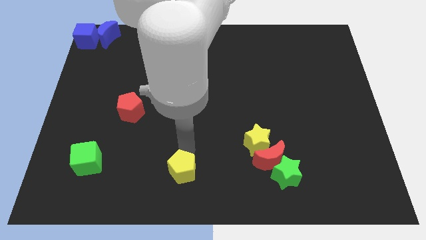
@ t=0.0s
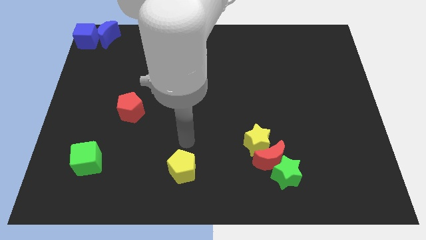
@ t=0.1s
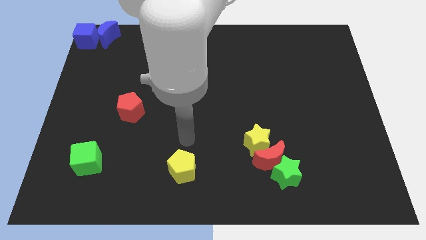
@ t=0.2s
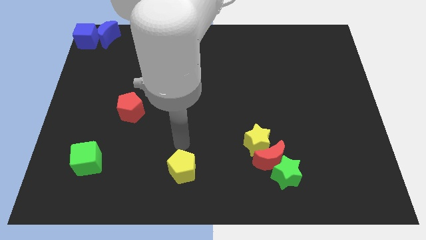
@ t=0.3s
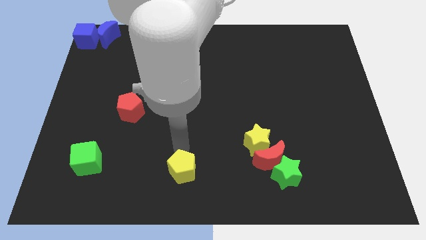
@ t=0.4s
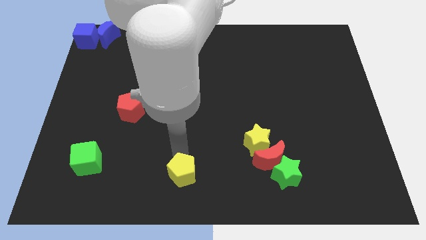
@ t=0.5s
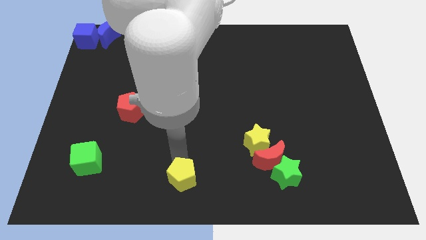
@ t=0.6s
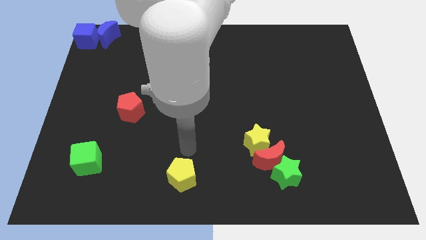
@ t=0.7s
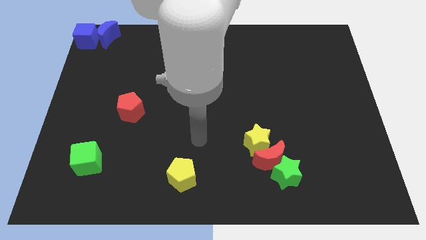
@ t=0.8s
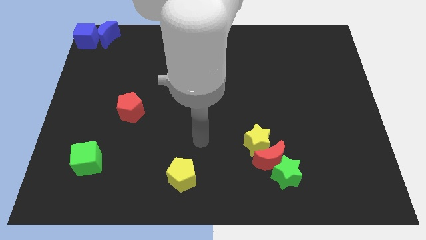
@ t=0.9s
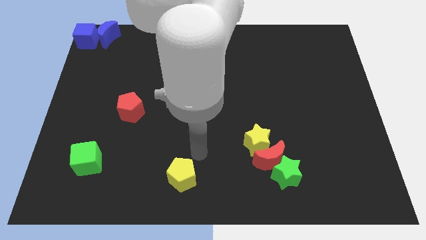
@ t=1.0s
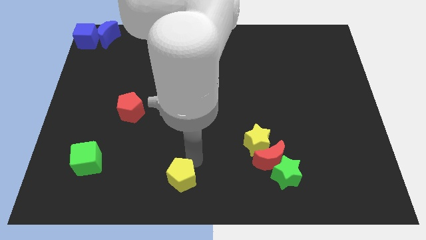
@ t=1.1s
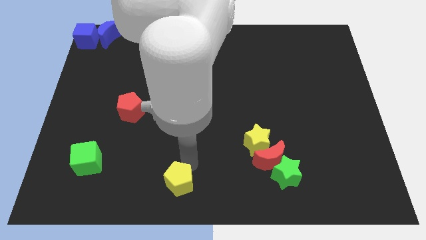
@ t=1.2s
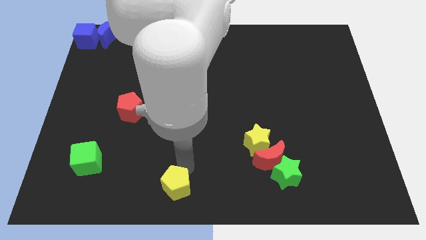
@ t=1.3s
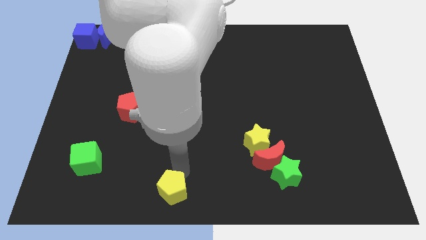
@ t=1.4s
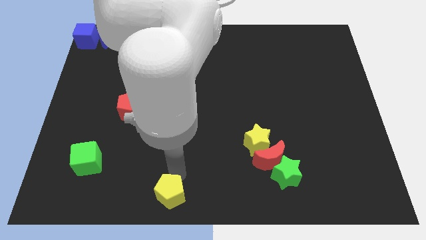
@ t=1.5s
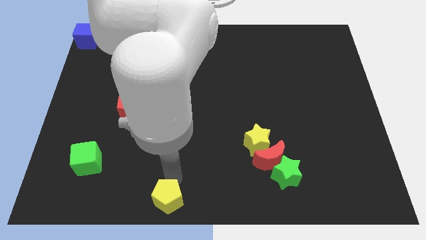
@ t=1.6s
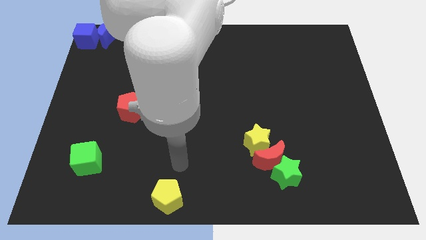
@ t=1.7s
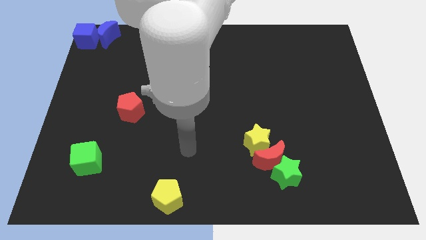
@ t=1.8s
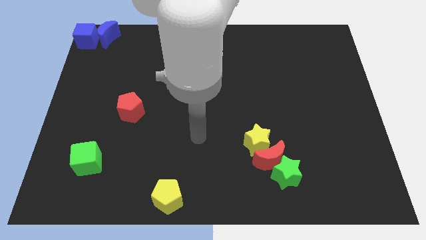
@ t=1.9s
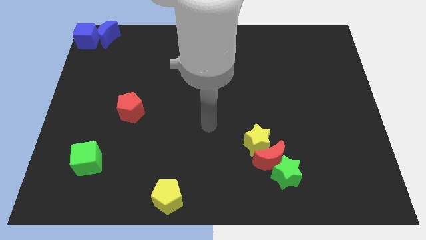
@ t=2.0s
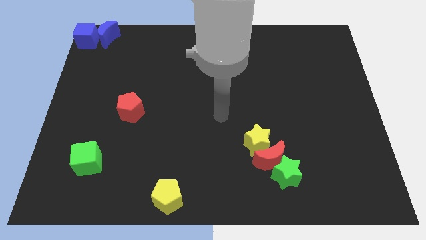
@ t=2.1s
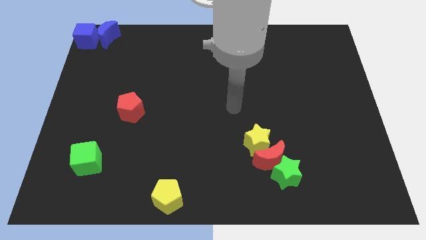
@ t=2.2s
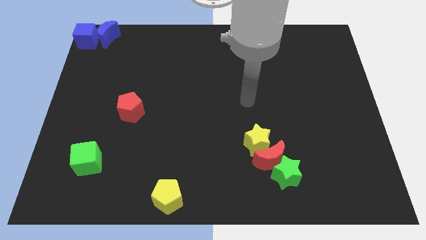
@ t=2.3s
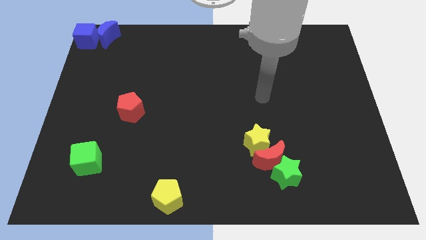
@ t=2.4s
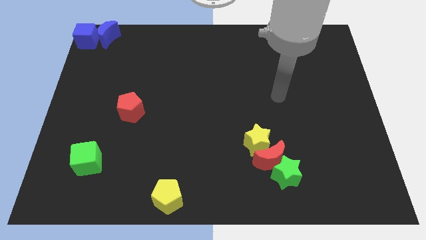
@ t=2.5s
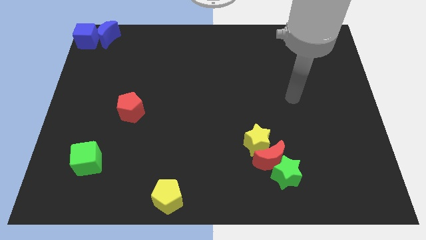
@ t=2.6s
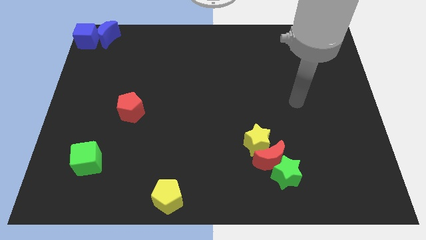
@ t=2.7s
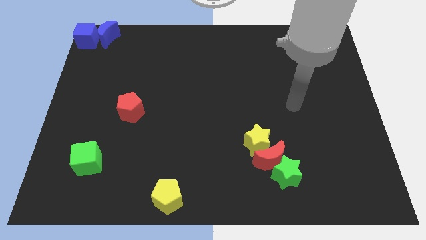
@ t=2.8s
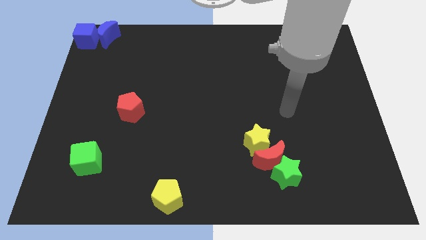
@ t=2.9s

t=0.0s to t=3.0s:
push the yellow pentagon to the bottom side

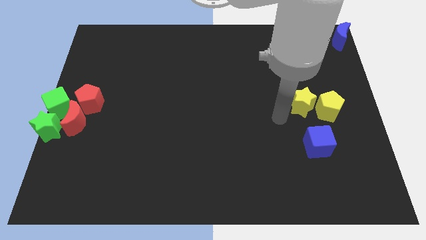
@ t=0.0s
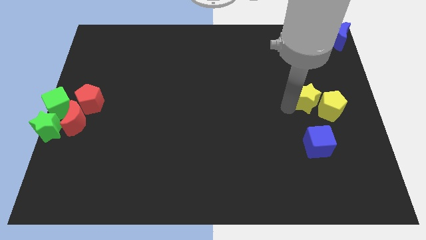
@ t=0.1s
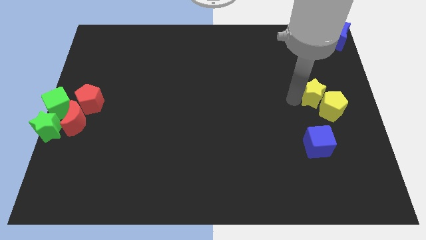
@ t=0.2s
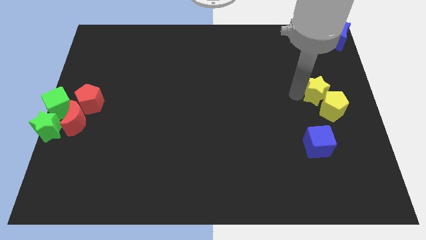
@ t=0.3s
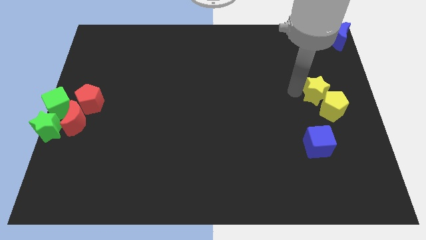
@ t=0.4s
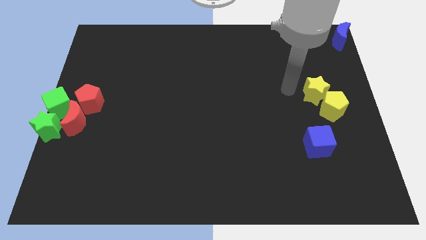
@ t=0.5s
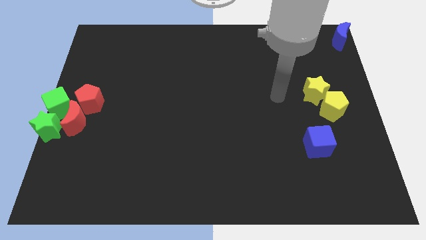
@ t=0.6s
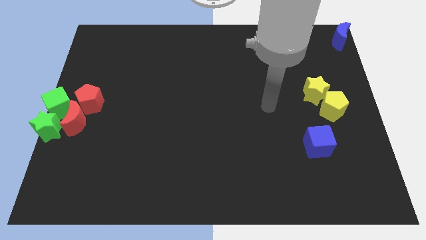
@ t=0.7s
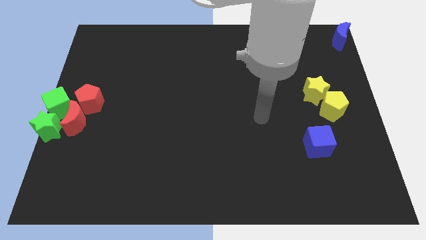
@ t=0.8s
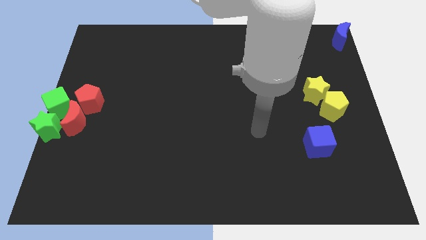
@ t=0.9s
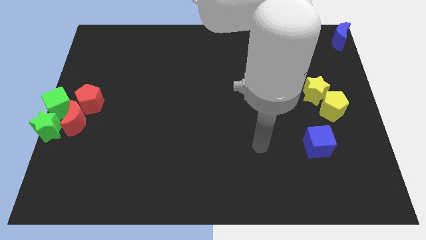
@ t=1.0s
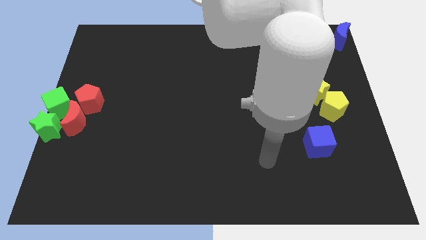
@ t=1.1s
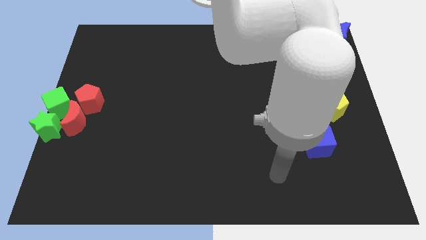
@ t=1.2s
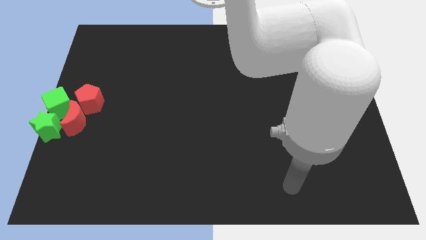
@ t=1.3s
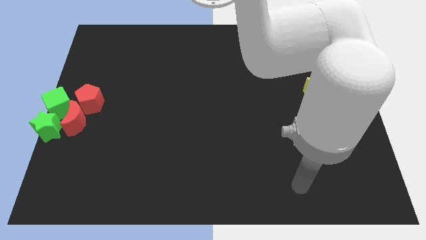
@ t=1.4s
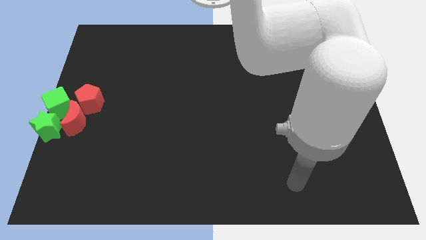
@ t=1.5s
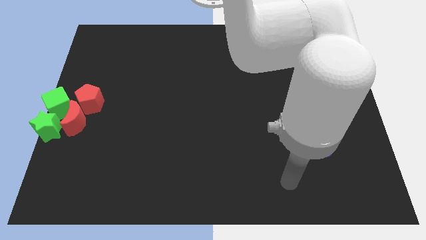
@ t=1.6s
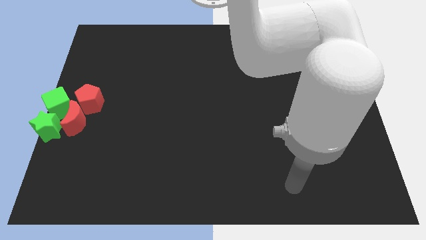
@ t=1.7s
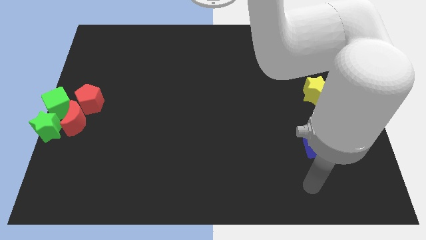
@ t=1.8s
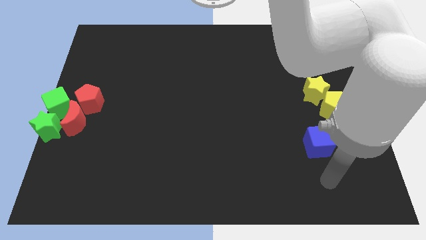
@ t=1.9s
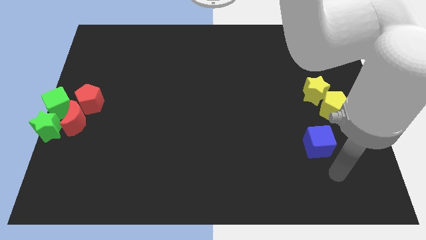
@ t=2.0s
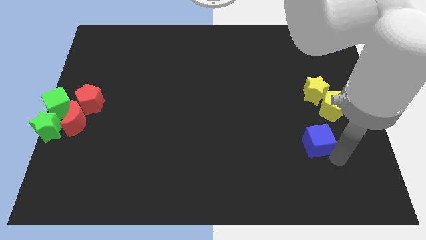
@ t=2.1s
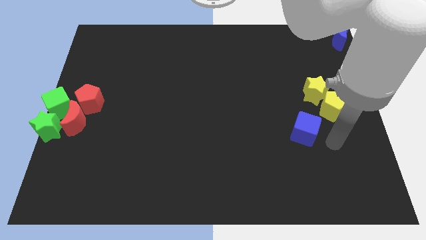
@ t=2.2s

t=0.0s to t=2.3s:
move the yellow star to the top left of the yellow pentagon

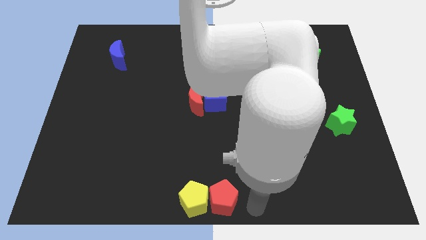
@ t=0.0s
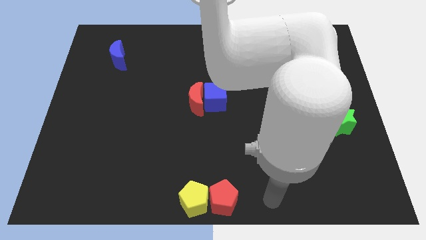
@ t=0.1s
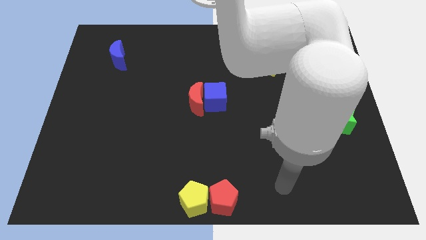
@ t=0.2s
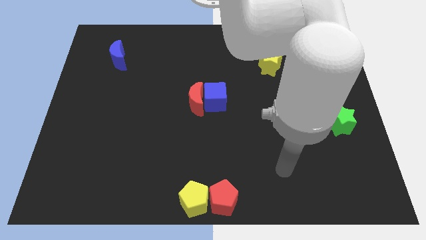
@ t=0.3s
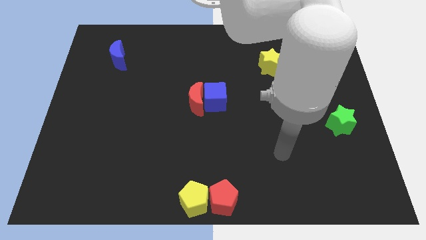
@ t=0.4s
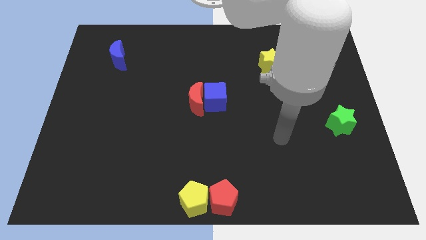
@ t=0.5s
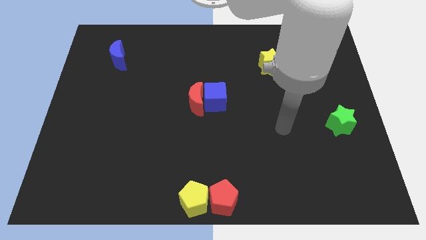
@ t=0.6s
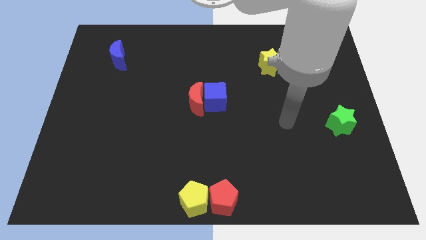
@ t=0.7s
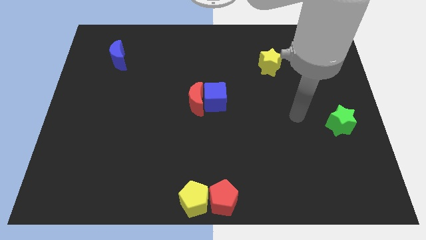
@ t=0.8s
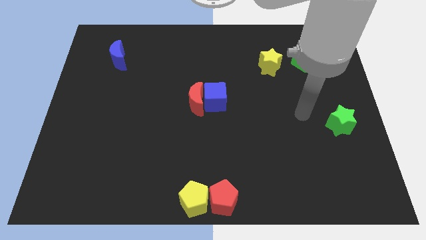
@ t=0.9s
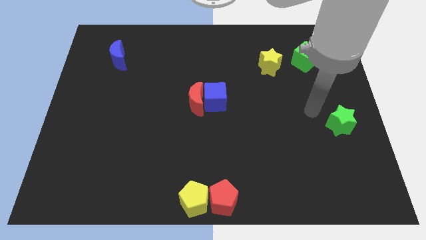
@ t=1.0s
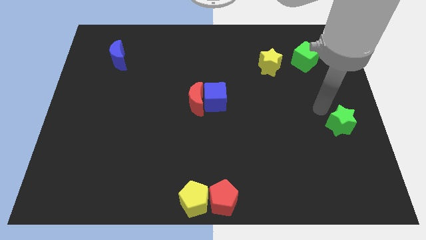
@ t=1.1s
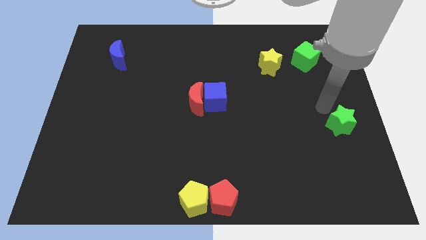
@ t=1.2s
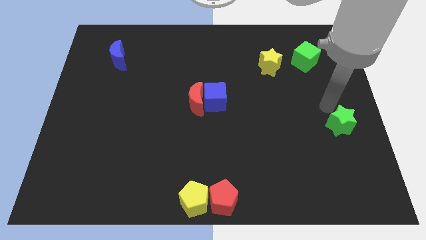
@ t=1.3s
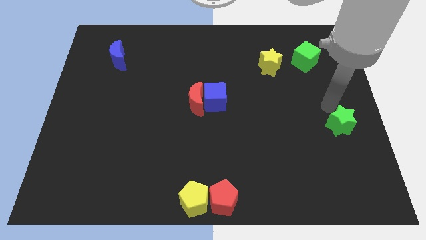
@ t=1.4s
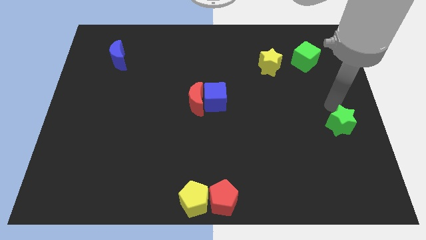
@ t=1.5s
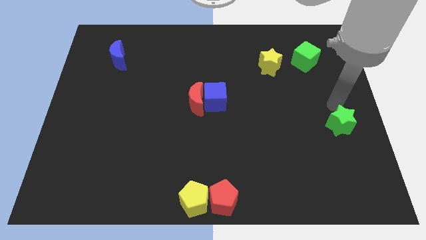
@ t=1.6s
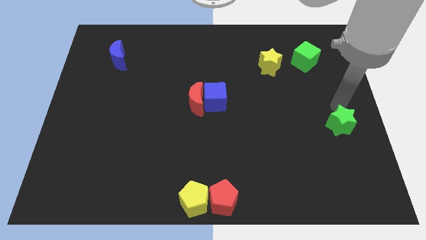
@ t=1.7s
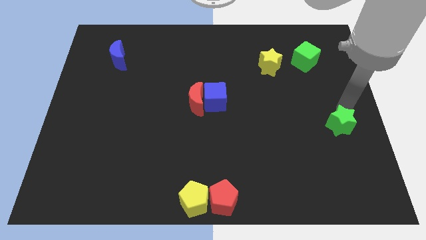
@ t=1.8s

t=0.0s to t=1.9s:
move your arm away from the red pentagon

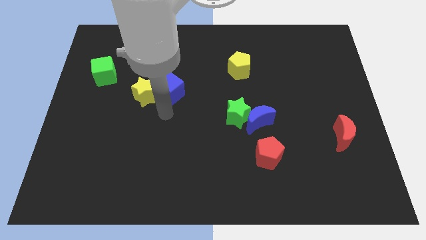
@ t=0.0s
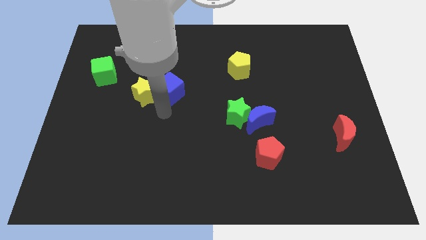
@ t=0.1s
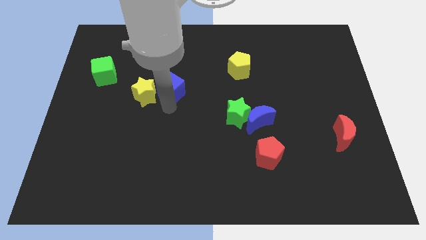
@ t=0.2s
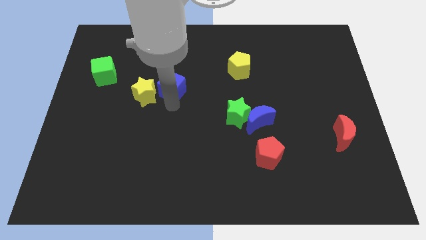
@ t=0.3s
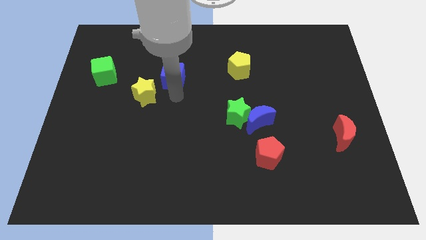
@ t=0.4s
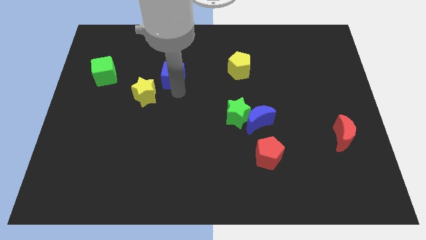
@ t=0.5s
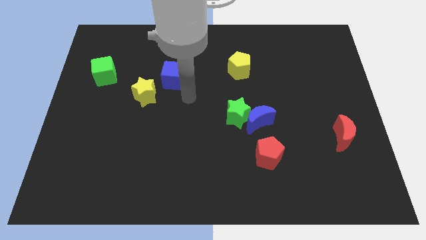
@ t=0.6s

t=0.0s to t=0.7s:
push the blue cube above the right of yellow star

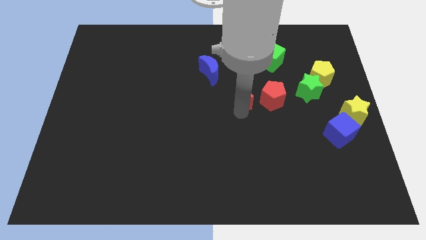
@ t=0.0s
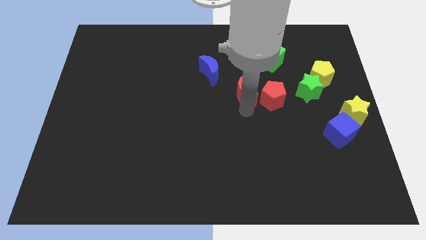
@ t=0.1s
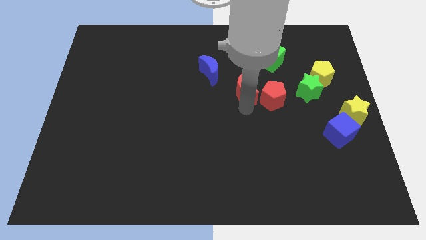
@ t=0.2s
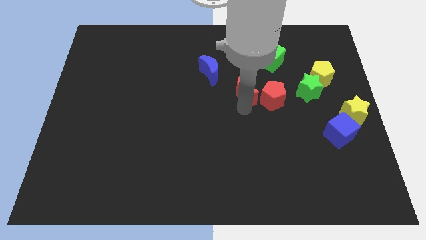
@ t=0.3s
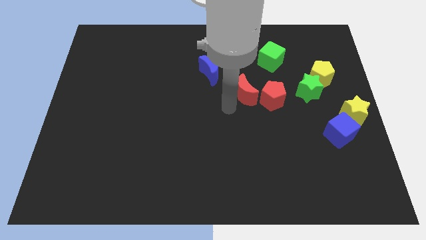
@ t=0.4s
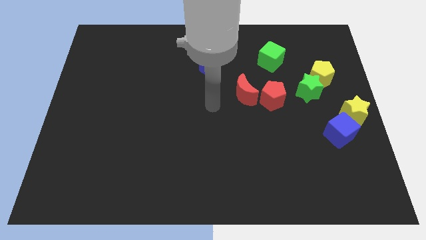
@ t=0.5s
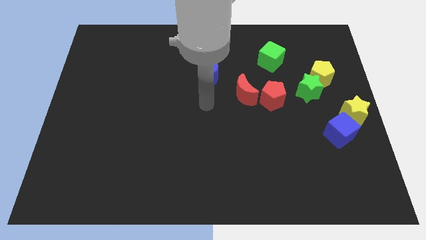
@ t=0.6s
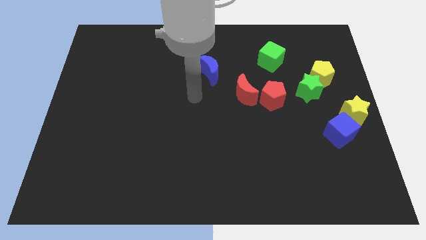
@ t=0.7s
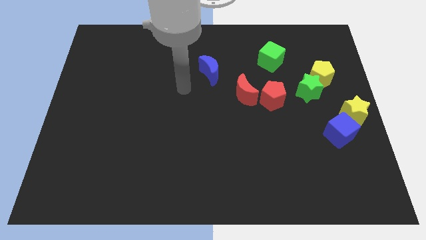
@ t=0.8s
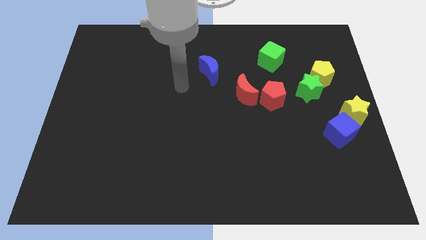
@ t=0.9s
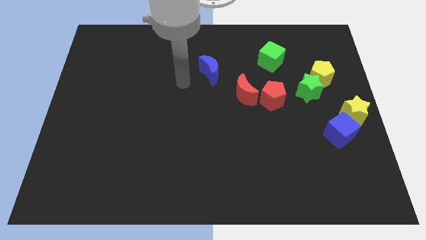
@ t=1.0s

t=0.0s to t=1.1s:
move the red crescent left beside the red pentagon
